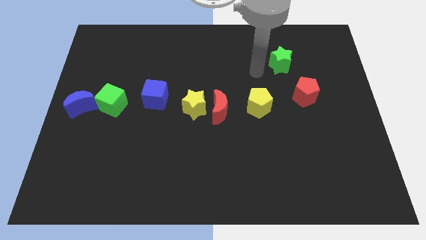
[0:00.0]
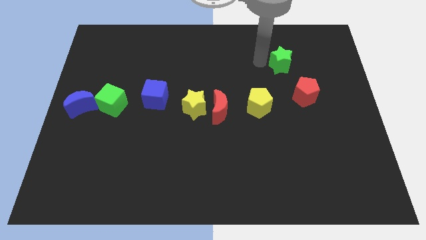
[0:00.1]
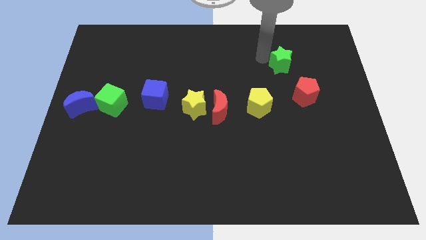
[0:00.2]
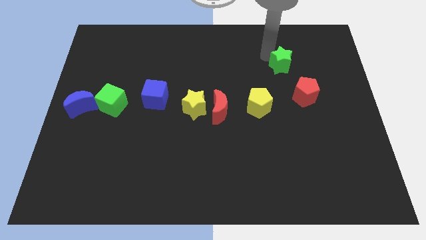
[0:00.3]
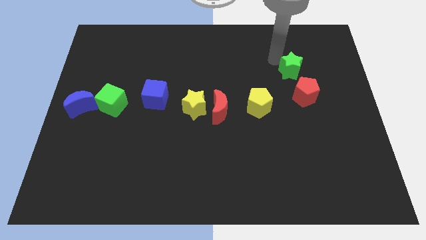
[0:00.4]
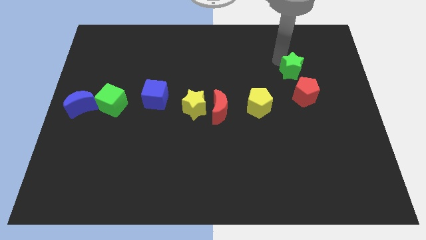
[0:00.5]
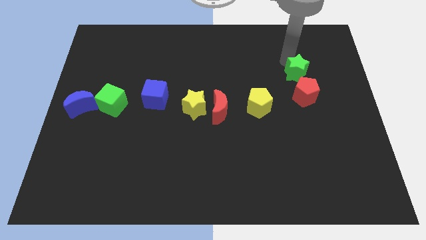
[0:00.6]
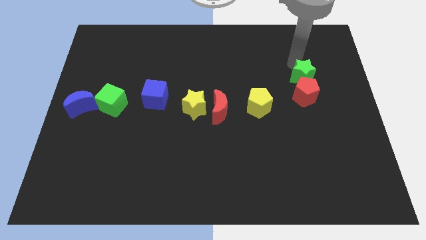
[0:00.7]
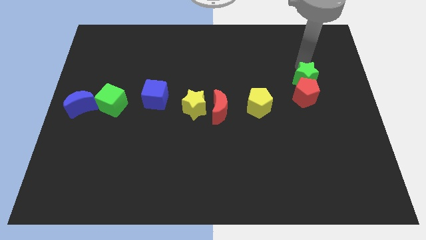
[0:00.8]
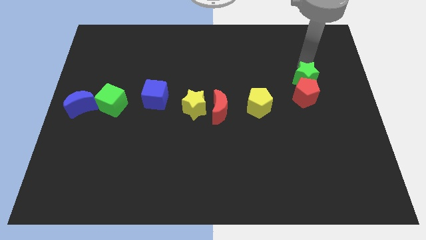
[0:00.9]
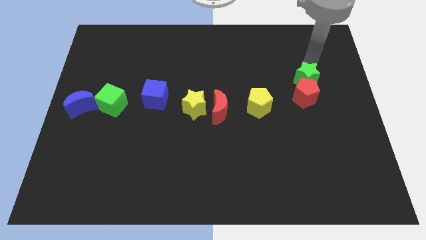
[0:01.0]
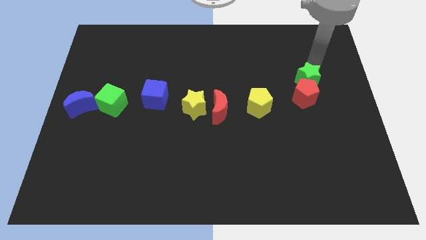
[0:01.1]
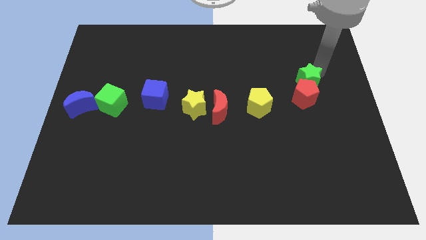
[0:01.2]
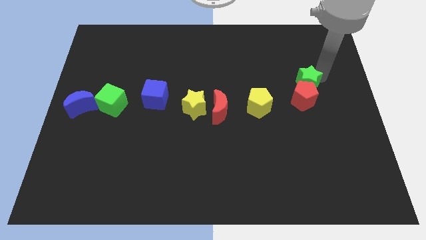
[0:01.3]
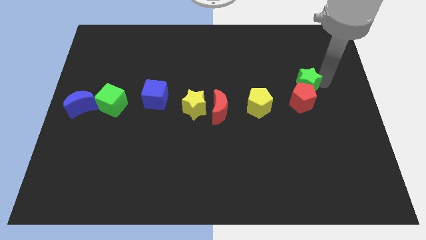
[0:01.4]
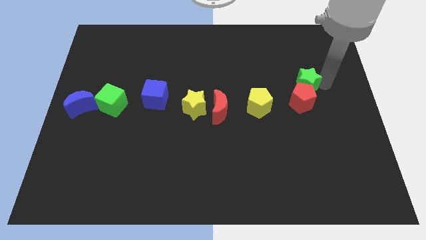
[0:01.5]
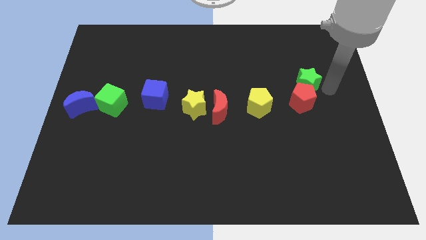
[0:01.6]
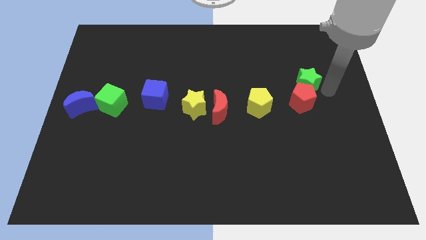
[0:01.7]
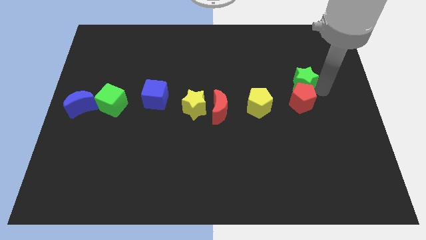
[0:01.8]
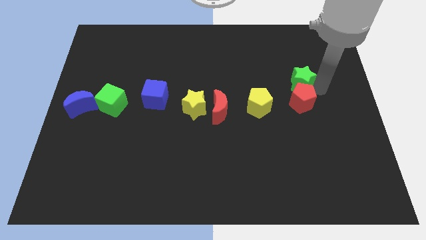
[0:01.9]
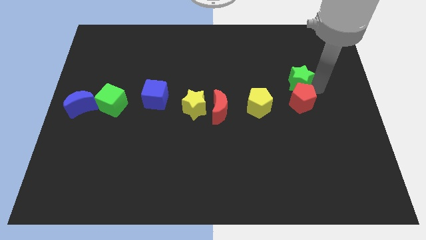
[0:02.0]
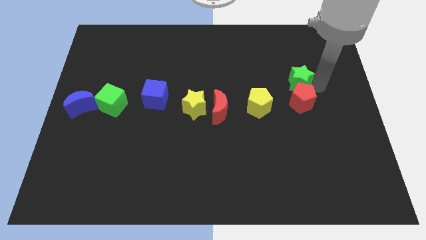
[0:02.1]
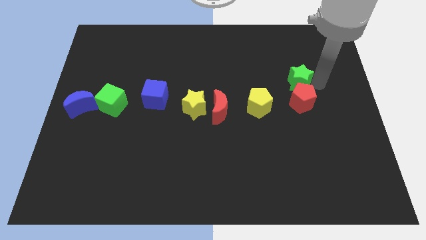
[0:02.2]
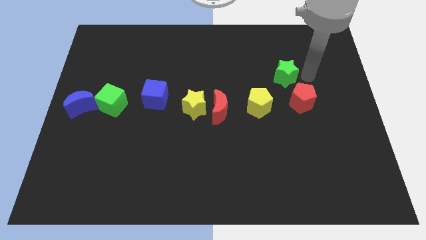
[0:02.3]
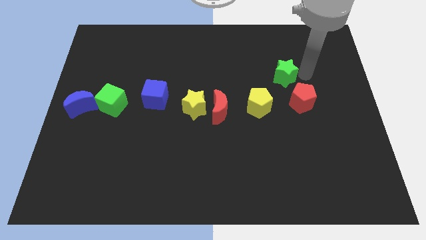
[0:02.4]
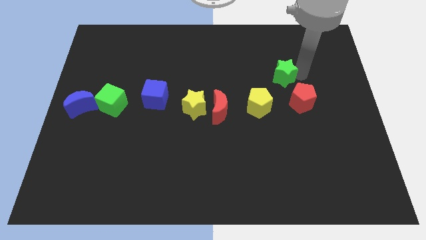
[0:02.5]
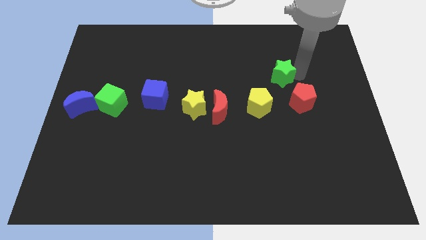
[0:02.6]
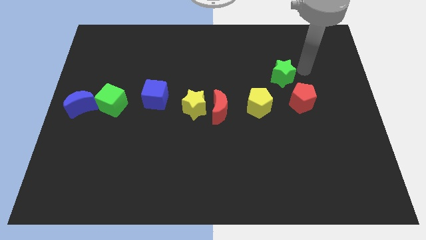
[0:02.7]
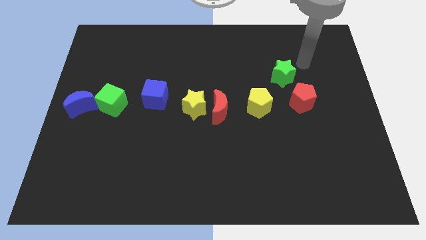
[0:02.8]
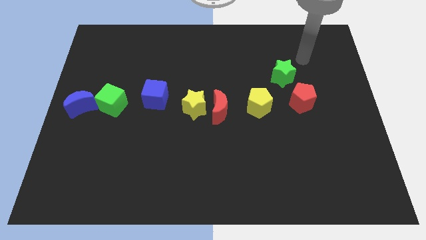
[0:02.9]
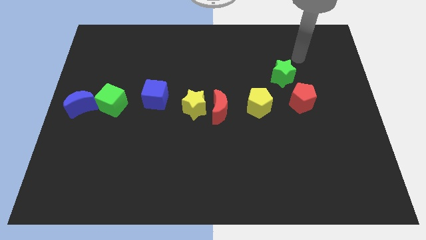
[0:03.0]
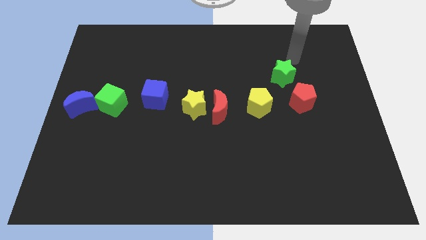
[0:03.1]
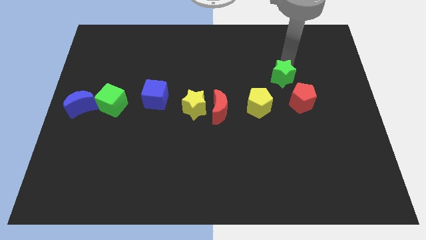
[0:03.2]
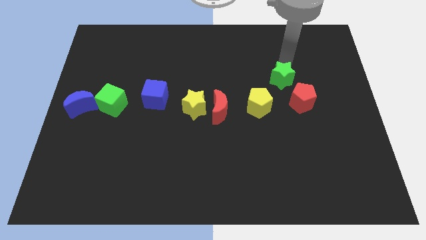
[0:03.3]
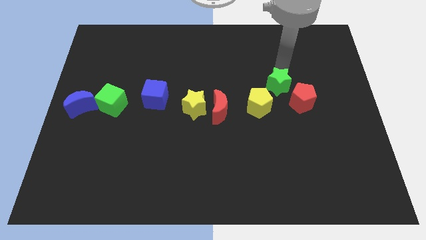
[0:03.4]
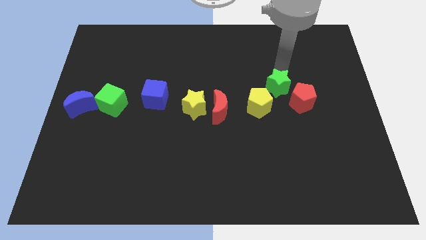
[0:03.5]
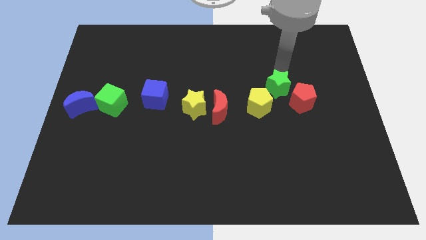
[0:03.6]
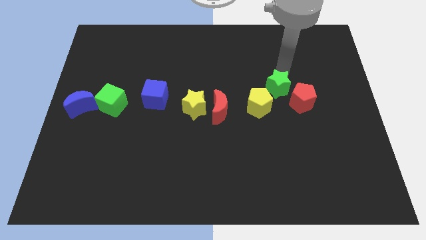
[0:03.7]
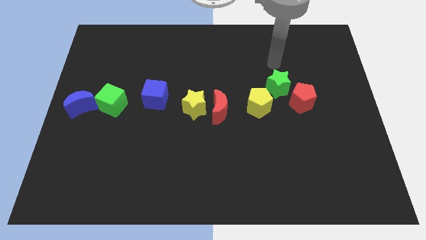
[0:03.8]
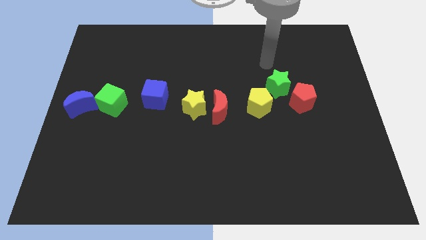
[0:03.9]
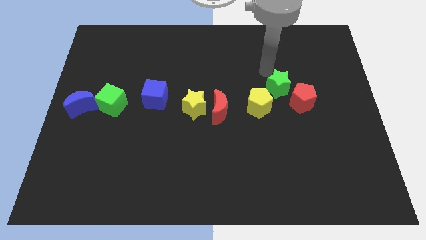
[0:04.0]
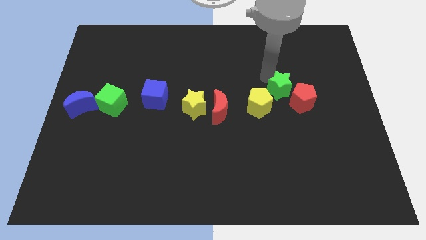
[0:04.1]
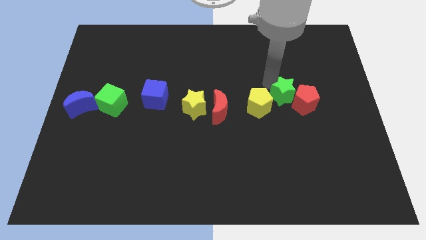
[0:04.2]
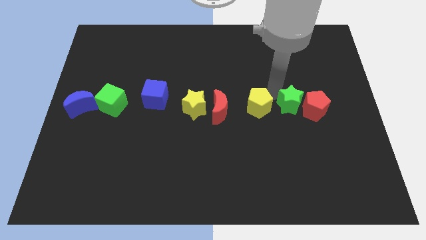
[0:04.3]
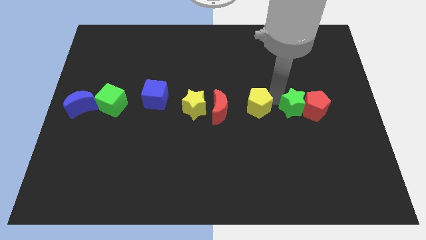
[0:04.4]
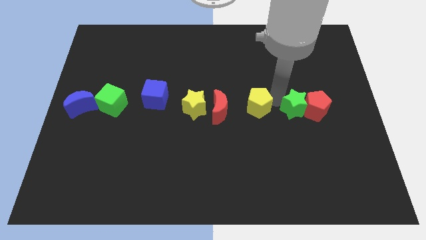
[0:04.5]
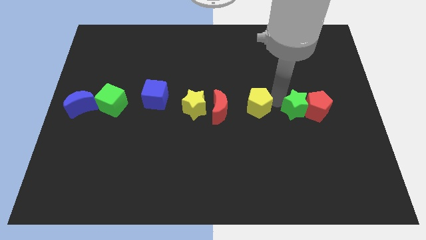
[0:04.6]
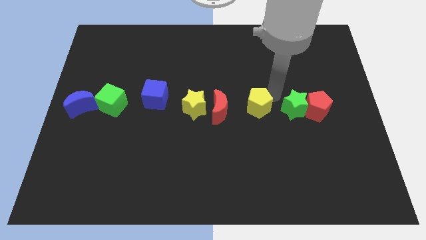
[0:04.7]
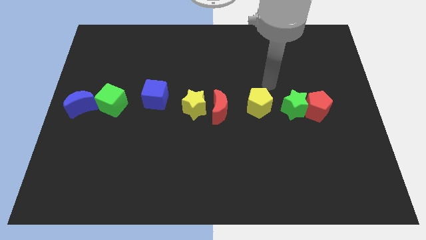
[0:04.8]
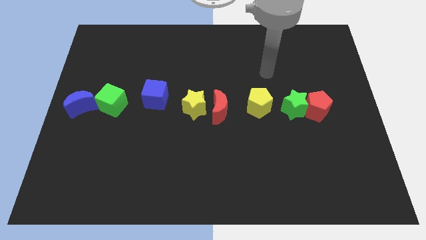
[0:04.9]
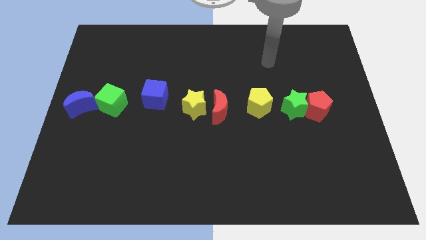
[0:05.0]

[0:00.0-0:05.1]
move green star into the red pentagon

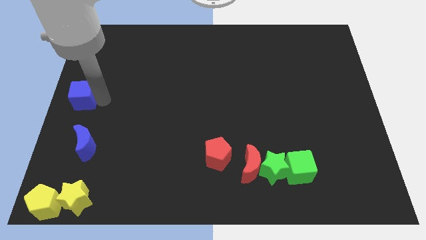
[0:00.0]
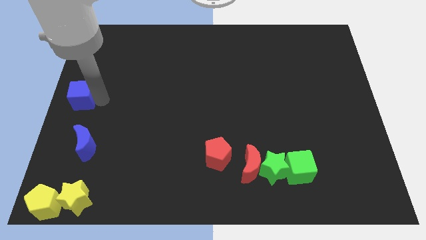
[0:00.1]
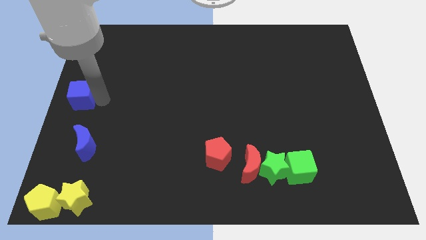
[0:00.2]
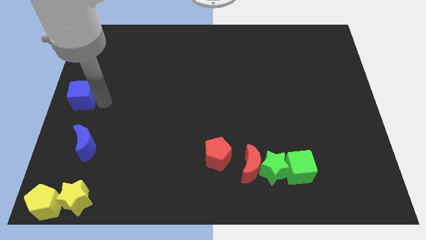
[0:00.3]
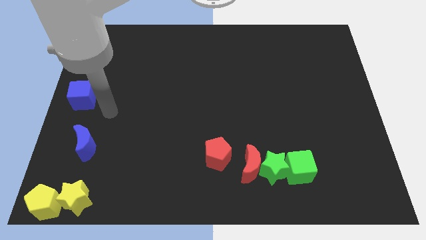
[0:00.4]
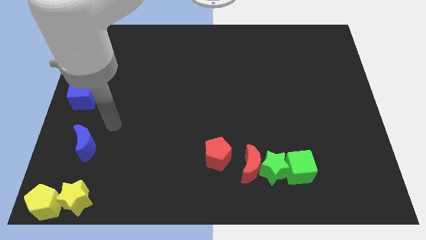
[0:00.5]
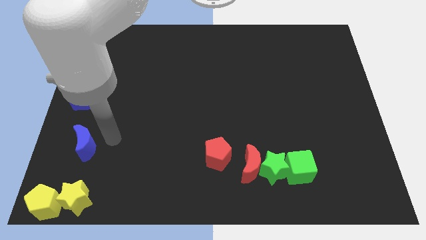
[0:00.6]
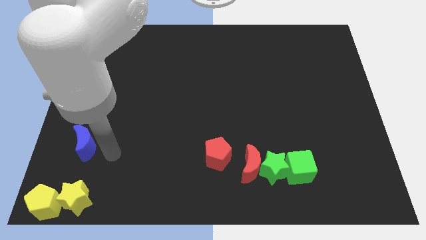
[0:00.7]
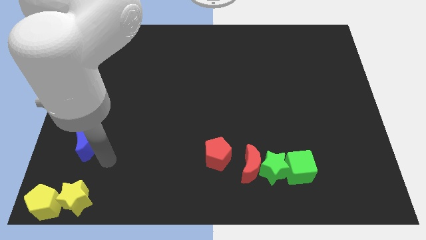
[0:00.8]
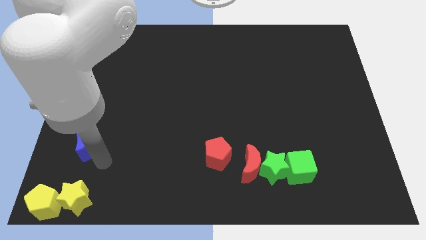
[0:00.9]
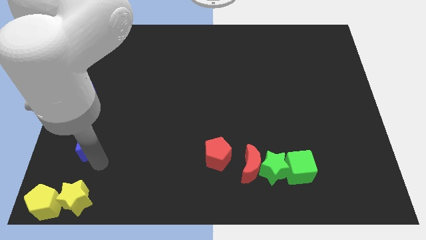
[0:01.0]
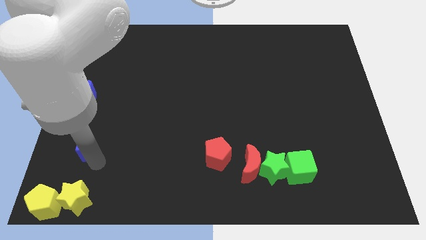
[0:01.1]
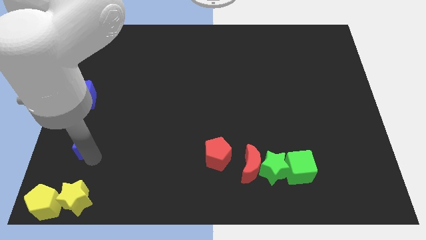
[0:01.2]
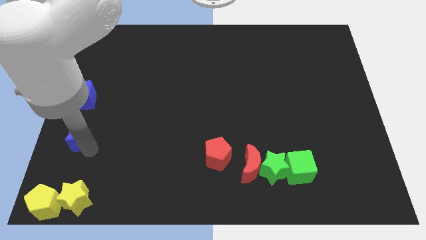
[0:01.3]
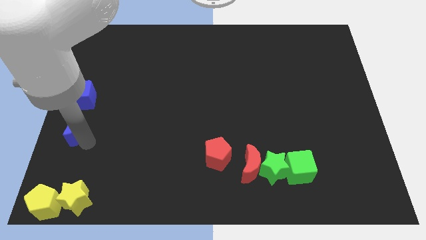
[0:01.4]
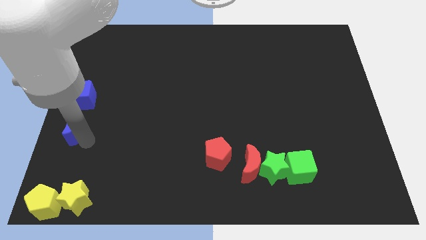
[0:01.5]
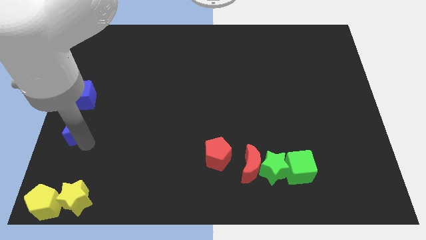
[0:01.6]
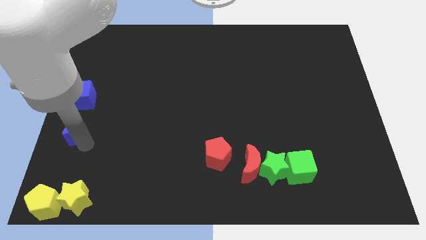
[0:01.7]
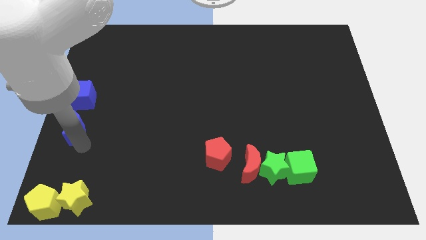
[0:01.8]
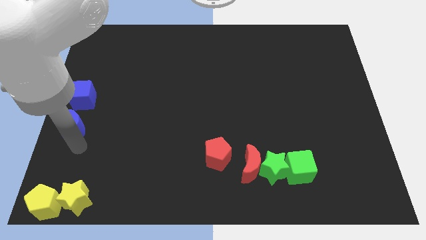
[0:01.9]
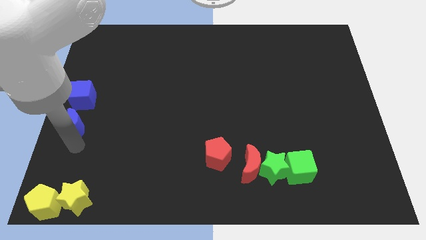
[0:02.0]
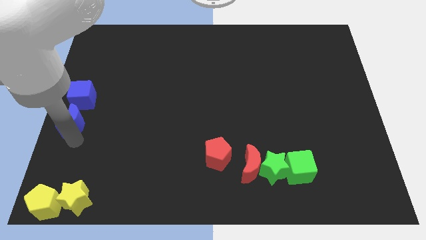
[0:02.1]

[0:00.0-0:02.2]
move the blue moon below the blue cube

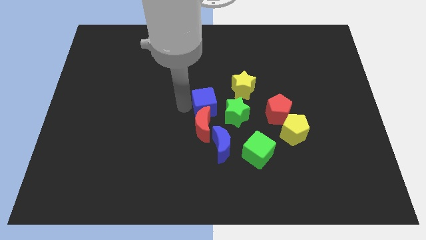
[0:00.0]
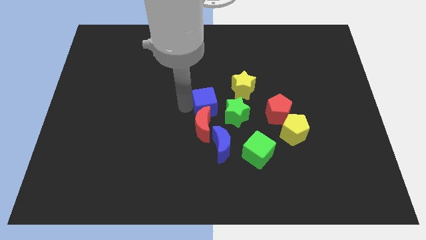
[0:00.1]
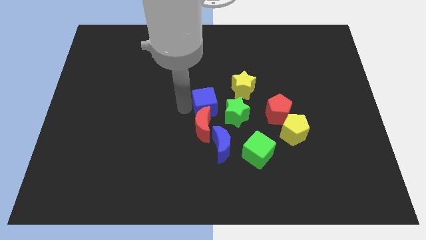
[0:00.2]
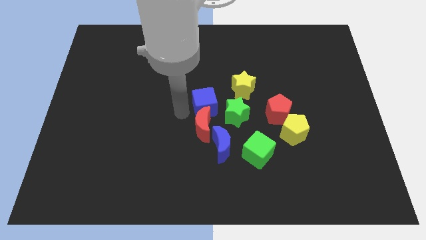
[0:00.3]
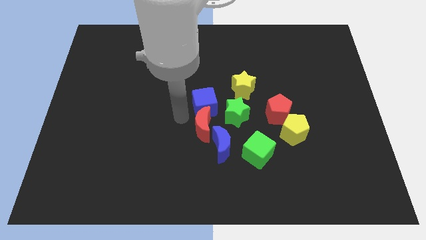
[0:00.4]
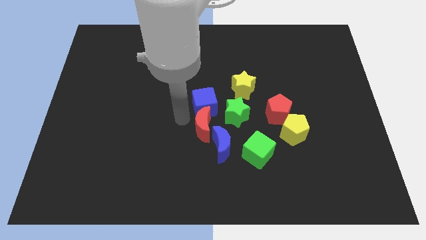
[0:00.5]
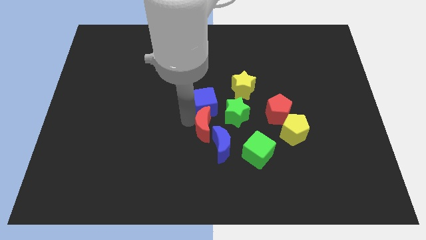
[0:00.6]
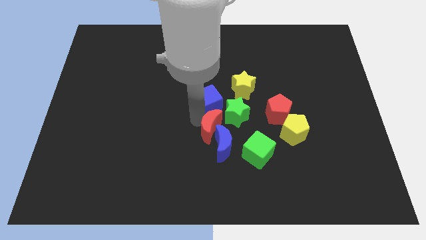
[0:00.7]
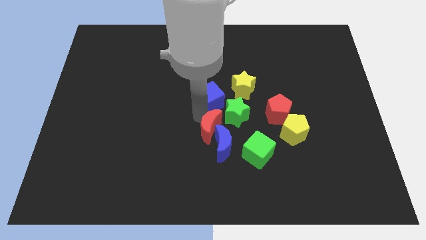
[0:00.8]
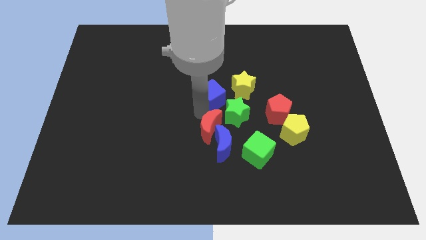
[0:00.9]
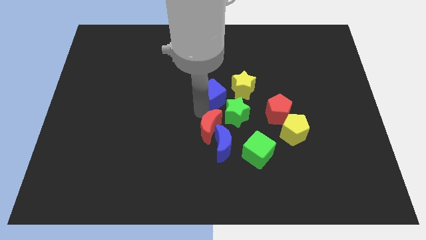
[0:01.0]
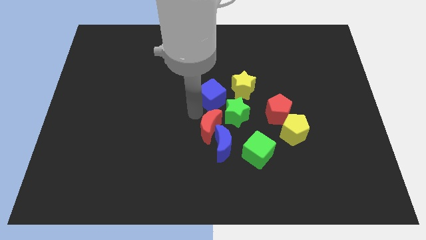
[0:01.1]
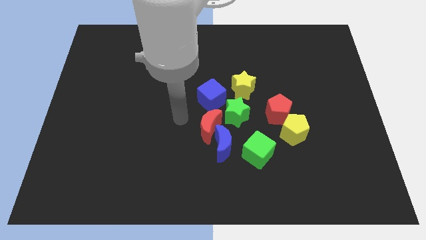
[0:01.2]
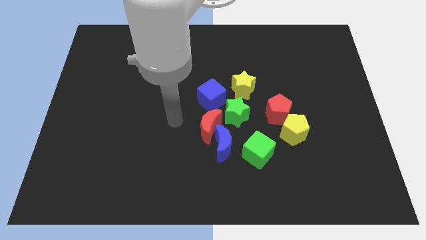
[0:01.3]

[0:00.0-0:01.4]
move the blue cube slightly towards the yellow star

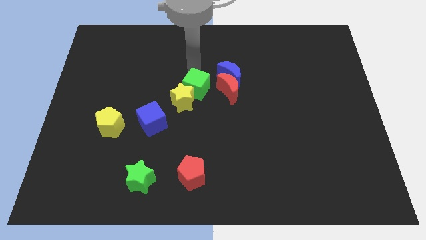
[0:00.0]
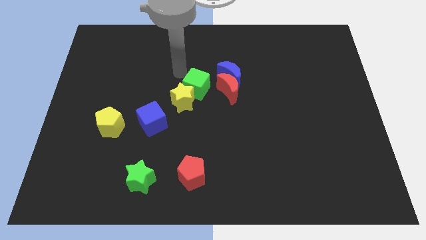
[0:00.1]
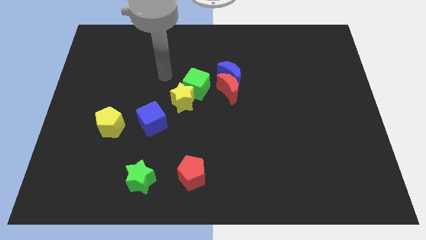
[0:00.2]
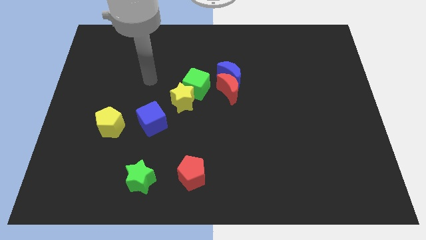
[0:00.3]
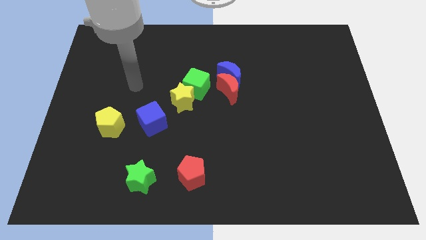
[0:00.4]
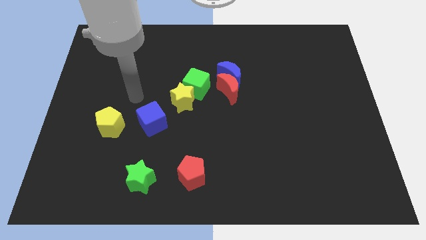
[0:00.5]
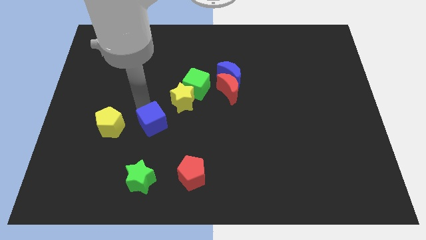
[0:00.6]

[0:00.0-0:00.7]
move your hand to the top left of the blue cube
